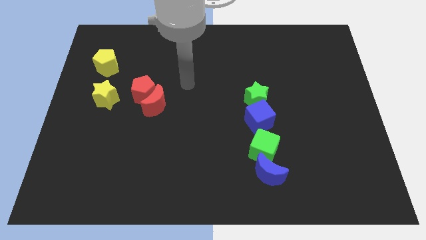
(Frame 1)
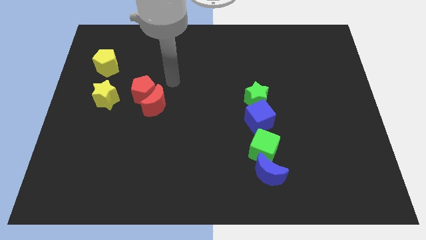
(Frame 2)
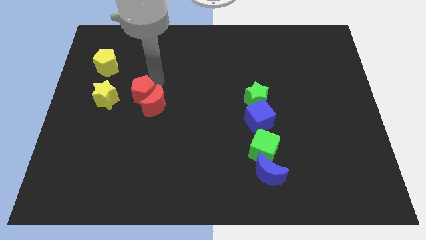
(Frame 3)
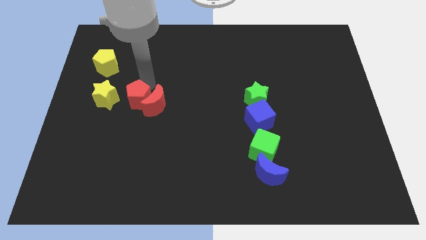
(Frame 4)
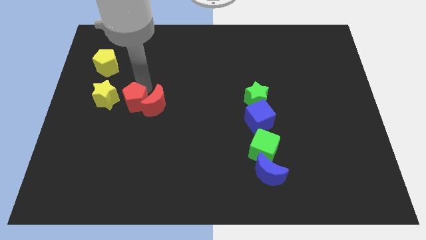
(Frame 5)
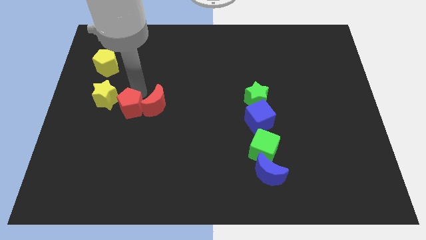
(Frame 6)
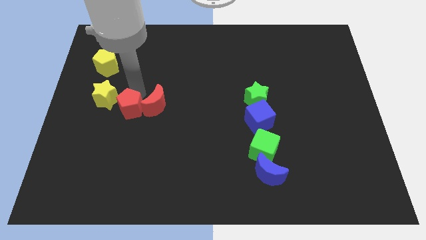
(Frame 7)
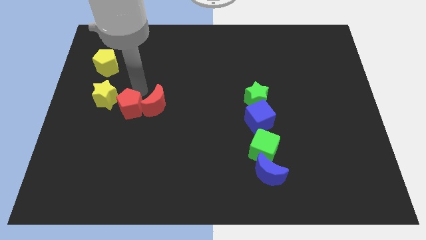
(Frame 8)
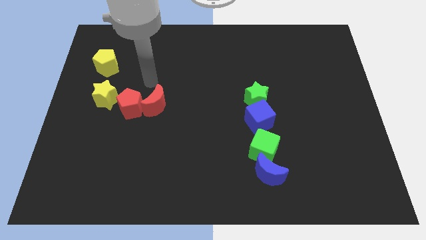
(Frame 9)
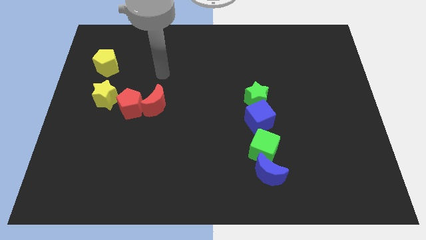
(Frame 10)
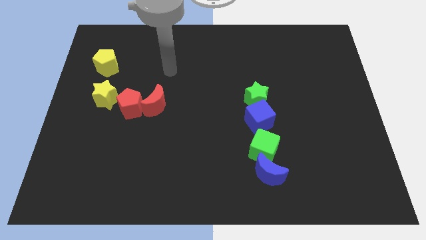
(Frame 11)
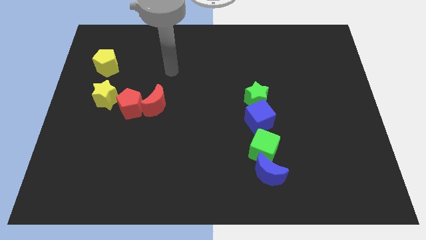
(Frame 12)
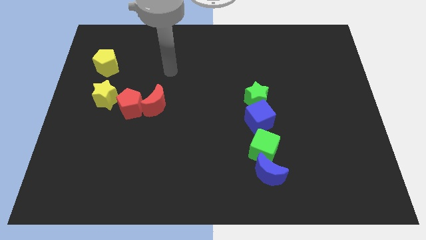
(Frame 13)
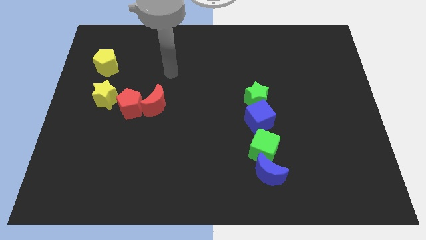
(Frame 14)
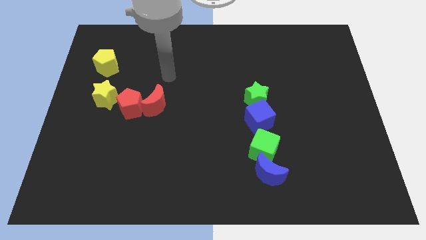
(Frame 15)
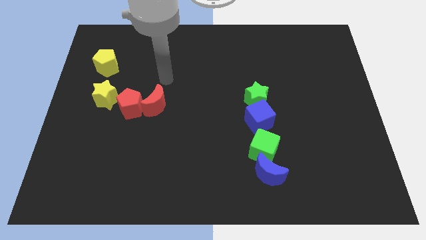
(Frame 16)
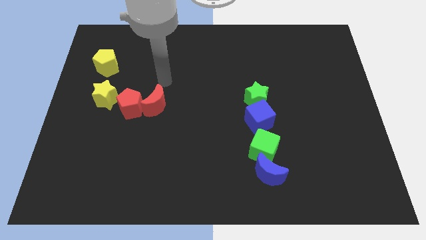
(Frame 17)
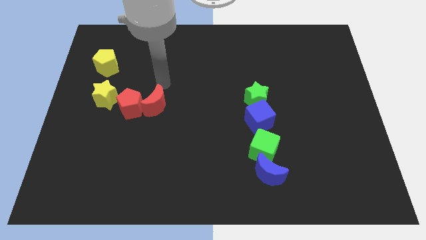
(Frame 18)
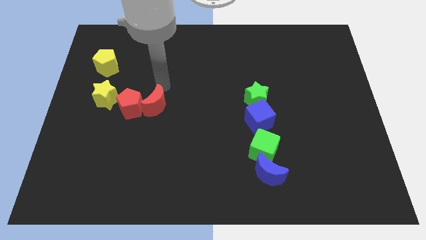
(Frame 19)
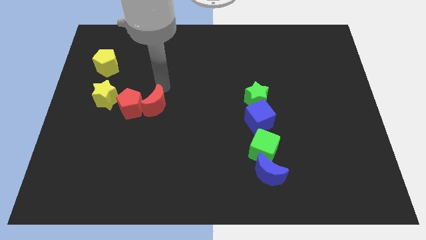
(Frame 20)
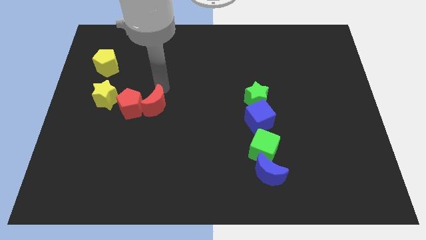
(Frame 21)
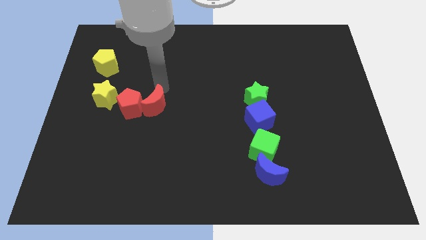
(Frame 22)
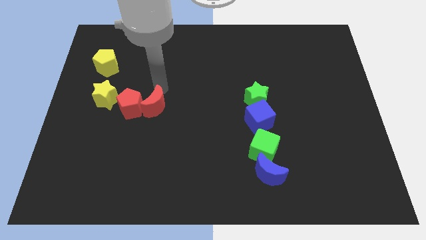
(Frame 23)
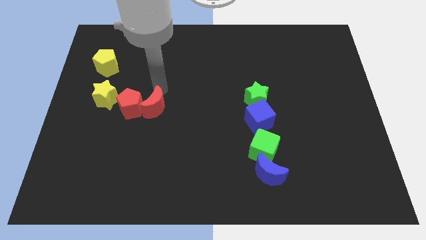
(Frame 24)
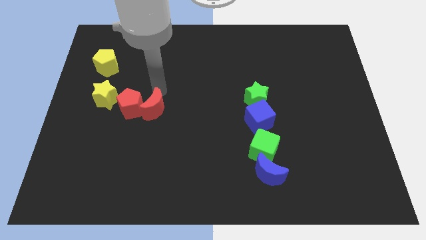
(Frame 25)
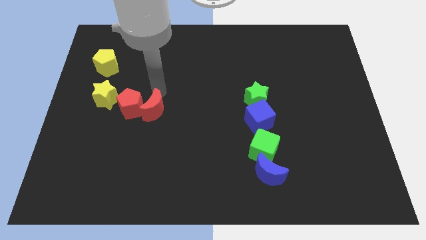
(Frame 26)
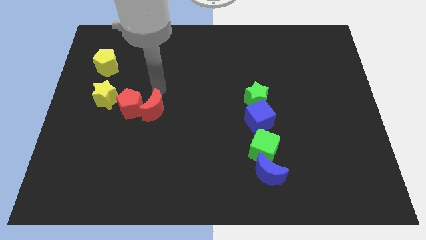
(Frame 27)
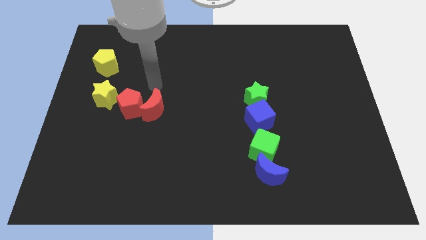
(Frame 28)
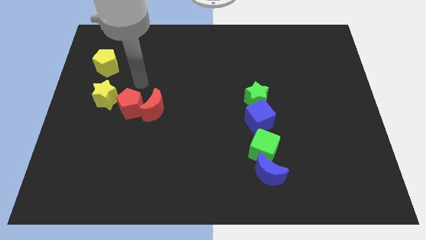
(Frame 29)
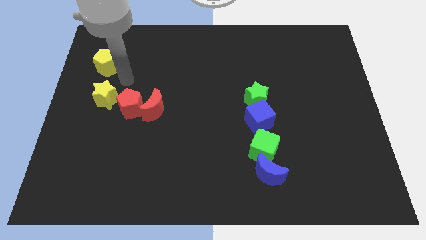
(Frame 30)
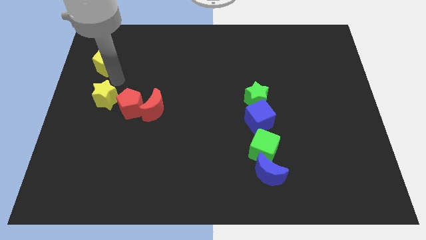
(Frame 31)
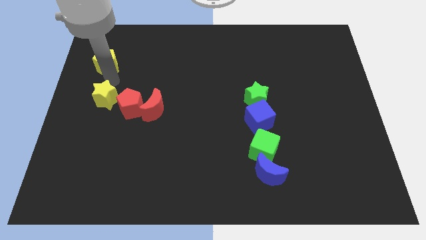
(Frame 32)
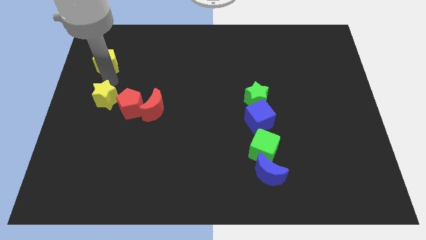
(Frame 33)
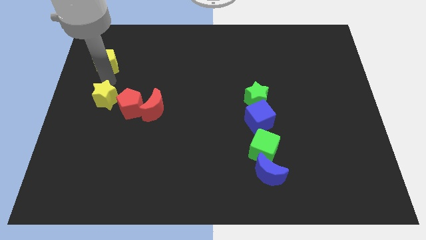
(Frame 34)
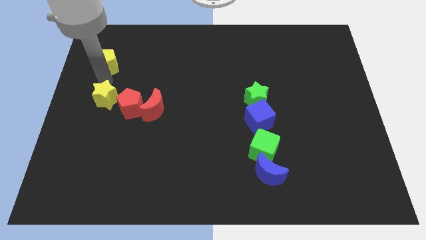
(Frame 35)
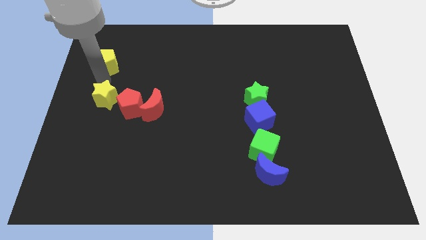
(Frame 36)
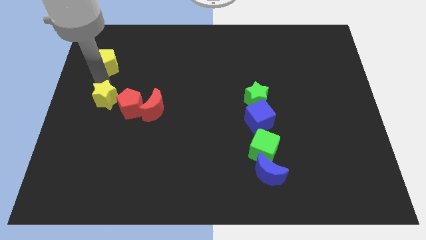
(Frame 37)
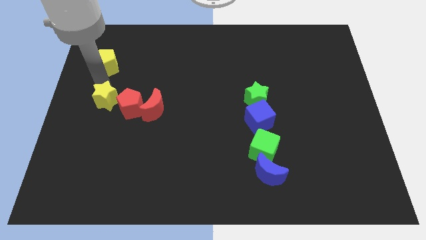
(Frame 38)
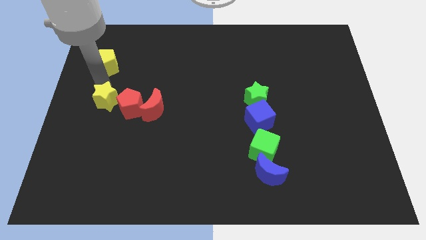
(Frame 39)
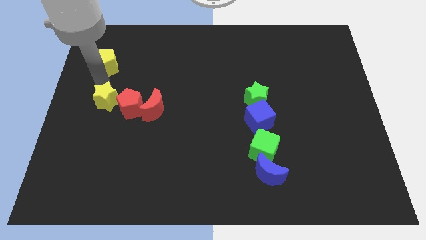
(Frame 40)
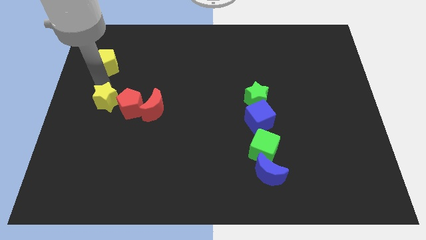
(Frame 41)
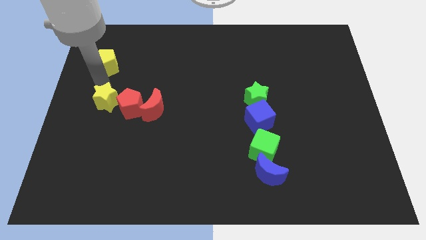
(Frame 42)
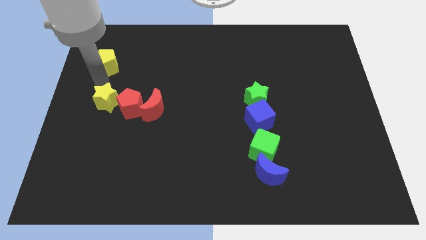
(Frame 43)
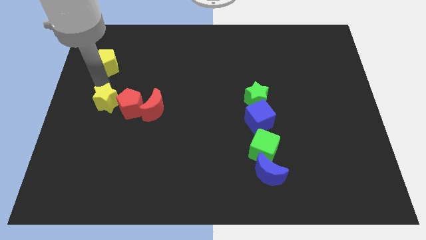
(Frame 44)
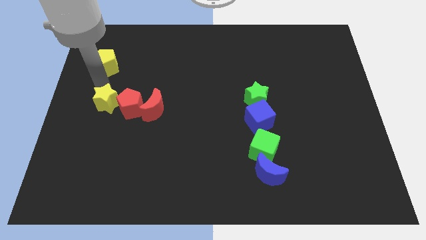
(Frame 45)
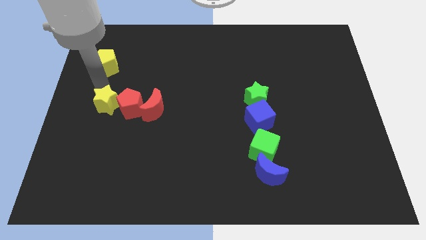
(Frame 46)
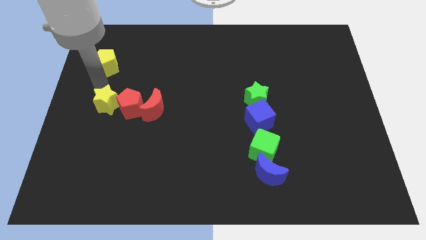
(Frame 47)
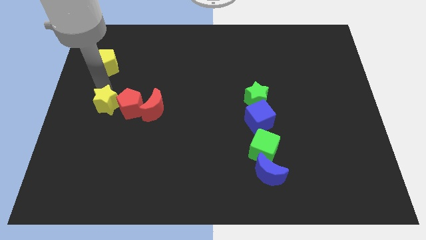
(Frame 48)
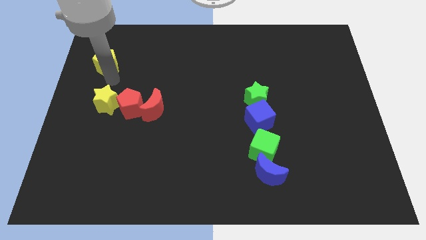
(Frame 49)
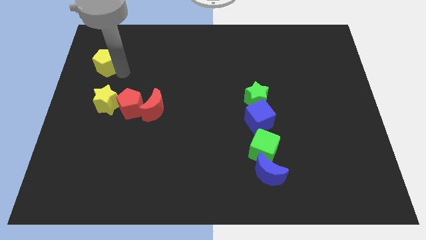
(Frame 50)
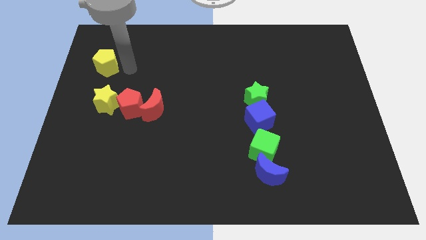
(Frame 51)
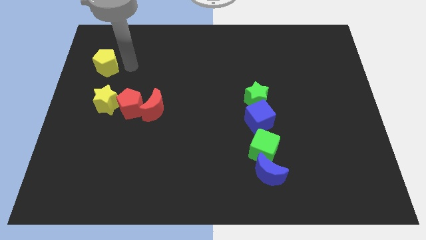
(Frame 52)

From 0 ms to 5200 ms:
form a horizontal line with red blocks and the yellow star

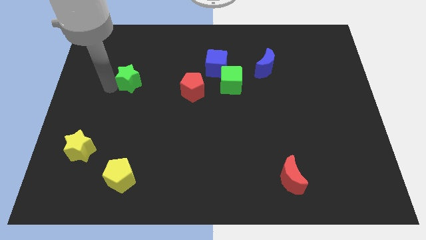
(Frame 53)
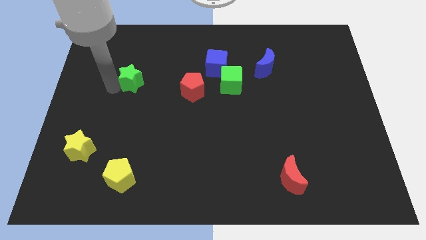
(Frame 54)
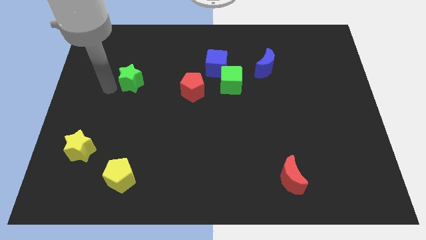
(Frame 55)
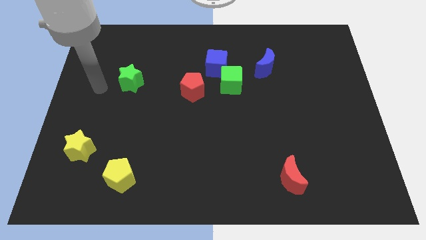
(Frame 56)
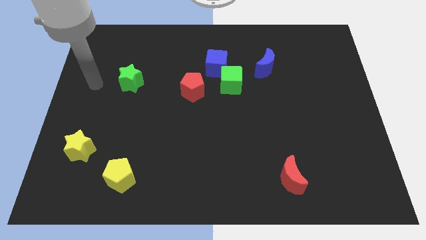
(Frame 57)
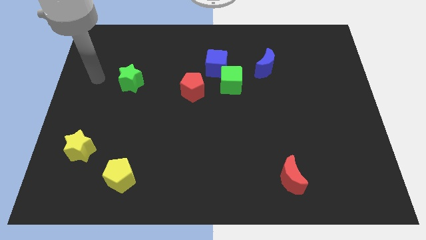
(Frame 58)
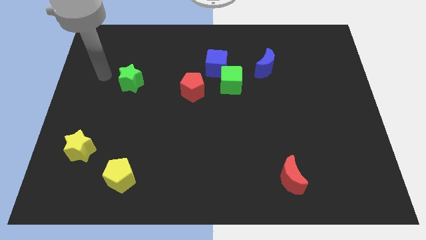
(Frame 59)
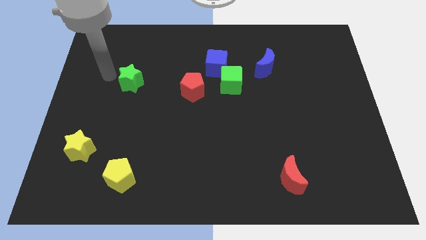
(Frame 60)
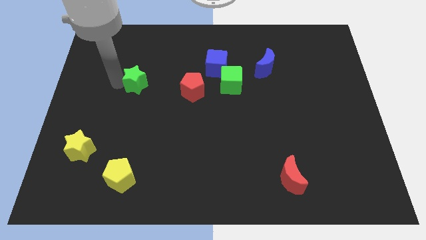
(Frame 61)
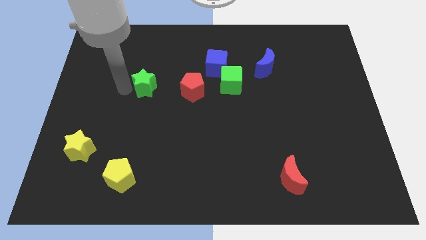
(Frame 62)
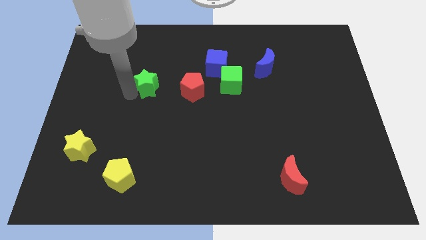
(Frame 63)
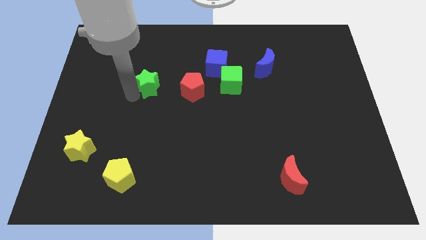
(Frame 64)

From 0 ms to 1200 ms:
place the star parallel left to the red pentagon

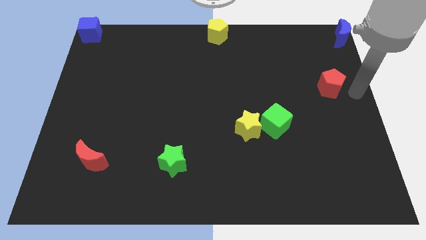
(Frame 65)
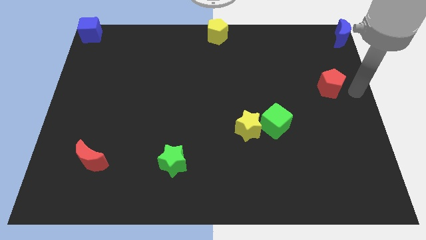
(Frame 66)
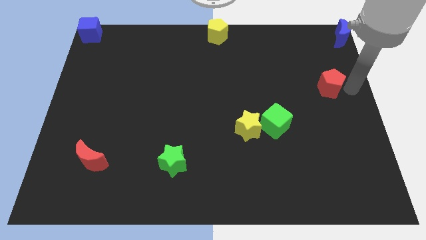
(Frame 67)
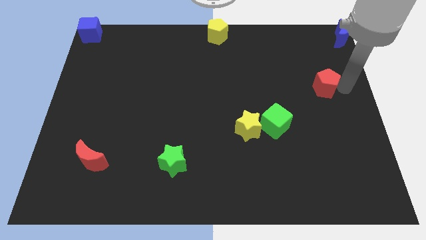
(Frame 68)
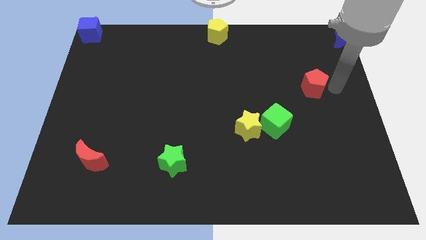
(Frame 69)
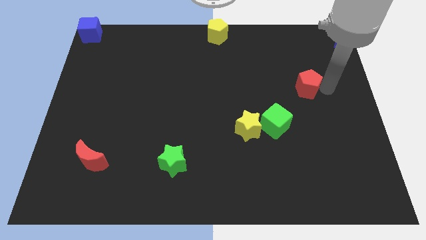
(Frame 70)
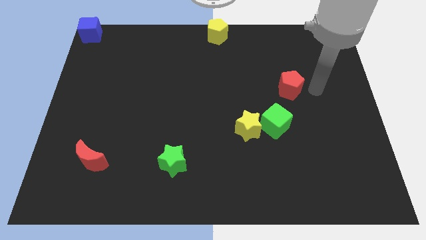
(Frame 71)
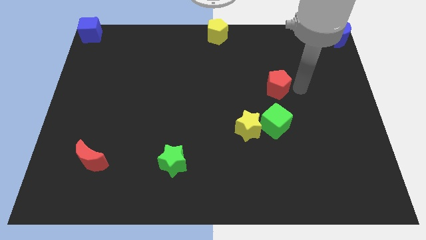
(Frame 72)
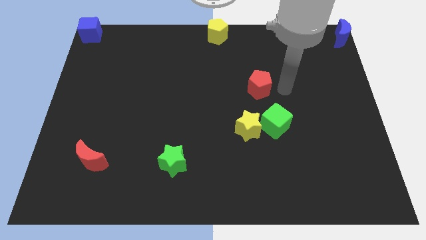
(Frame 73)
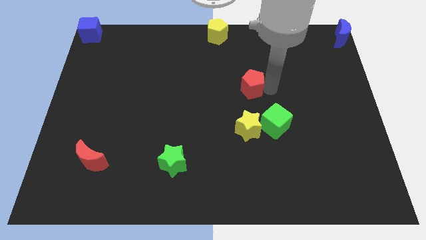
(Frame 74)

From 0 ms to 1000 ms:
move the red pentagon to the left of the board

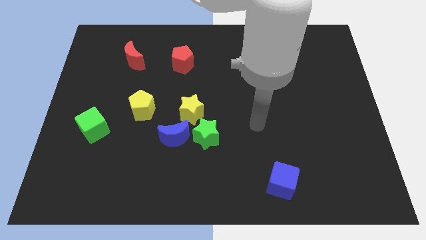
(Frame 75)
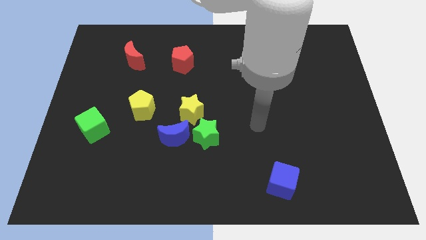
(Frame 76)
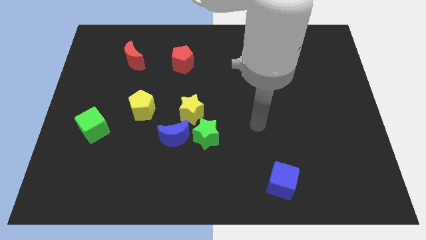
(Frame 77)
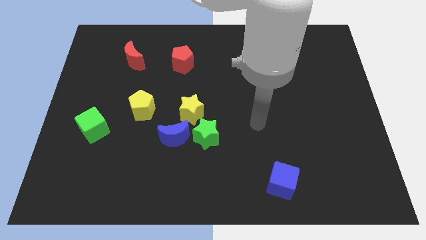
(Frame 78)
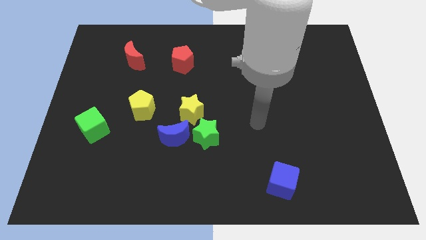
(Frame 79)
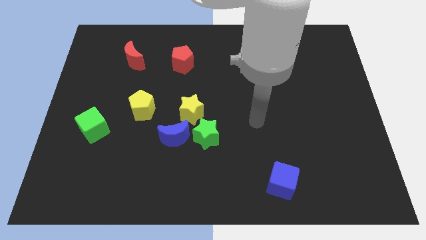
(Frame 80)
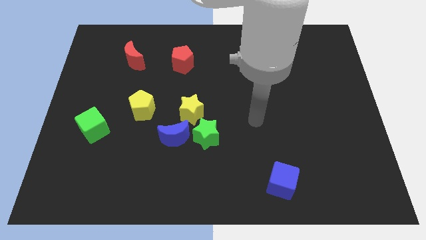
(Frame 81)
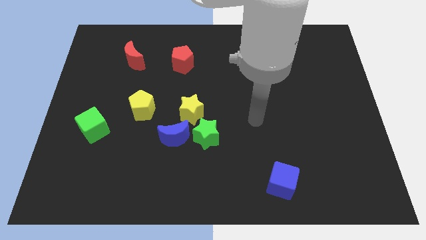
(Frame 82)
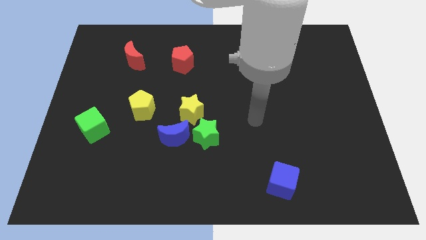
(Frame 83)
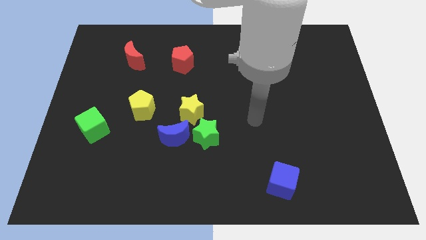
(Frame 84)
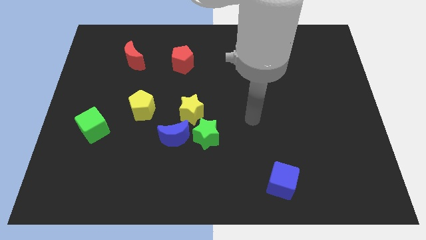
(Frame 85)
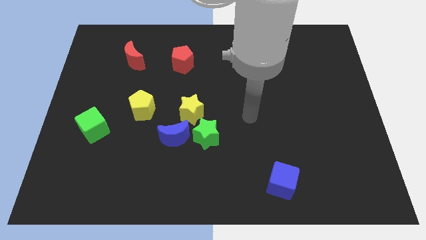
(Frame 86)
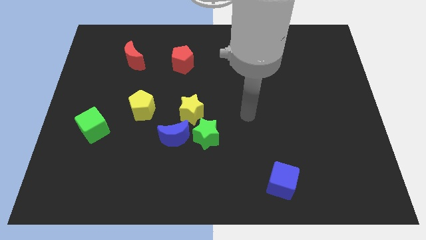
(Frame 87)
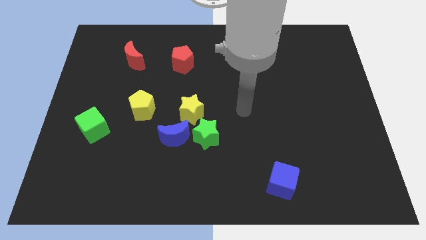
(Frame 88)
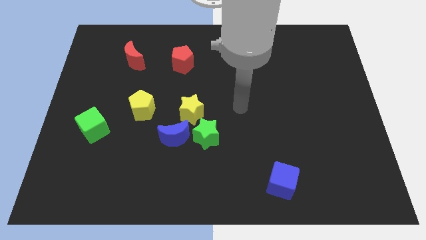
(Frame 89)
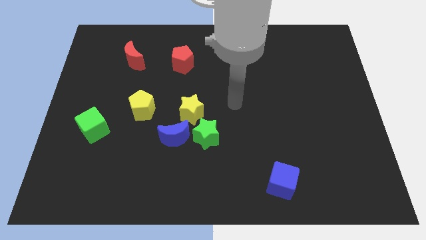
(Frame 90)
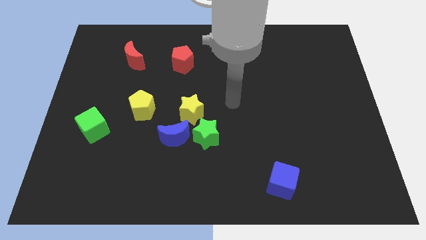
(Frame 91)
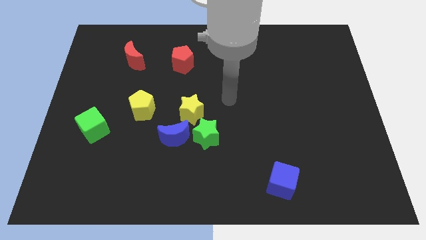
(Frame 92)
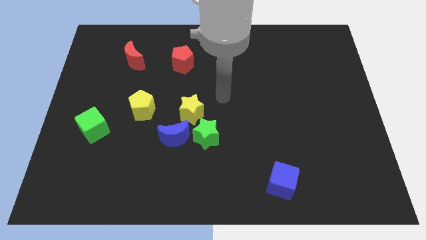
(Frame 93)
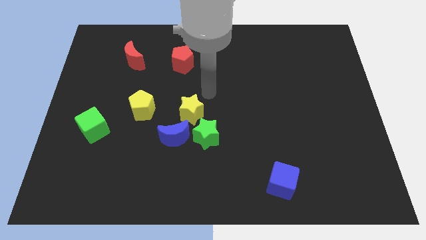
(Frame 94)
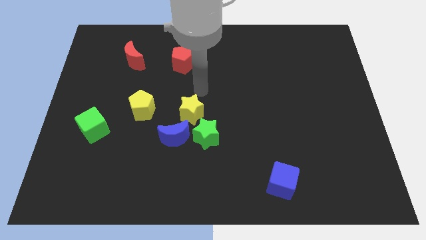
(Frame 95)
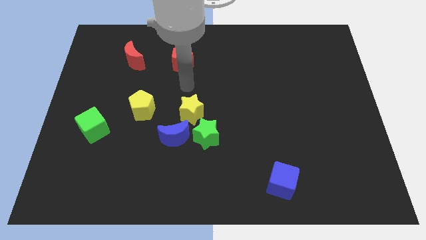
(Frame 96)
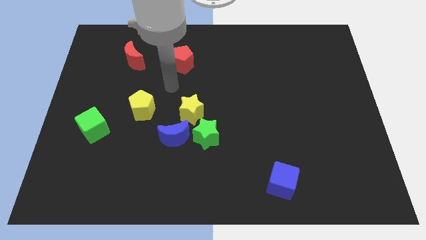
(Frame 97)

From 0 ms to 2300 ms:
place your arm to the top of the yellow star
